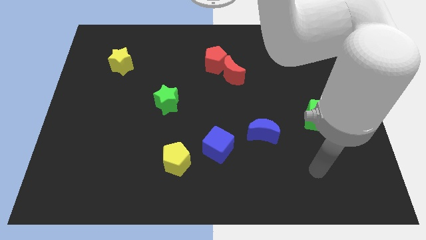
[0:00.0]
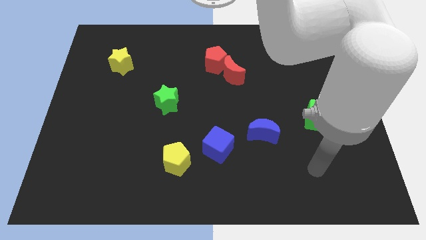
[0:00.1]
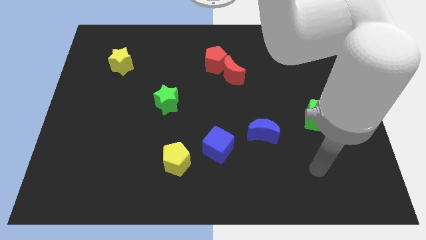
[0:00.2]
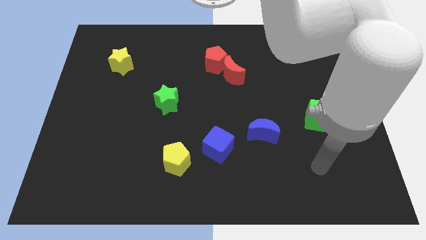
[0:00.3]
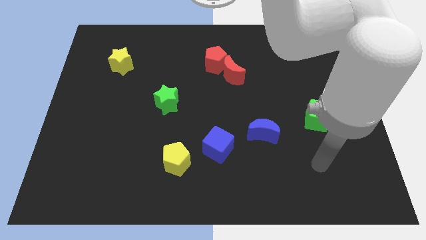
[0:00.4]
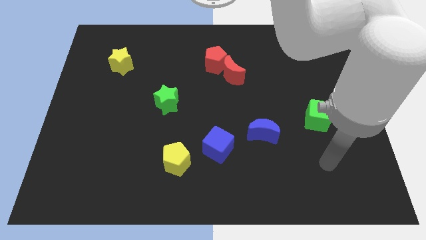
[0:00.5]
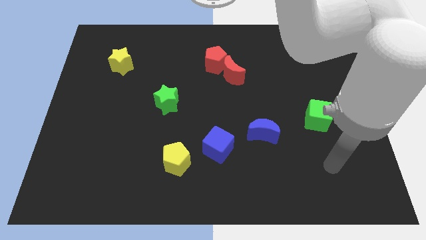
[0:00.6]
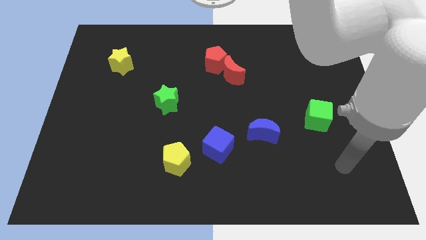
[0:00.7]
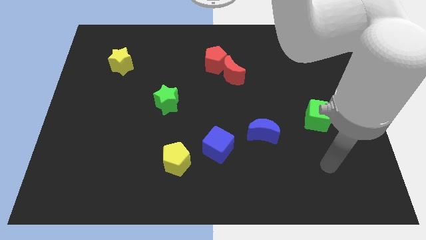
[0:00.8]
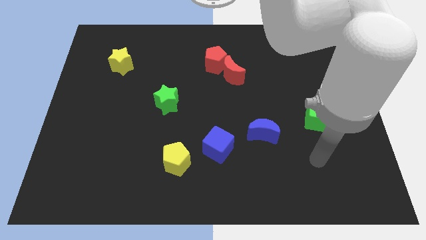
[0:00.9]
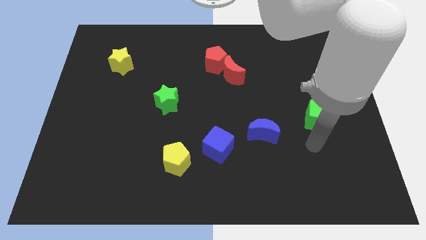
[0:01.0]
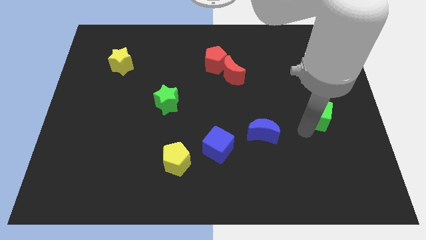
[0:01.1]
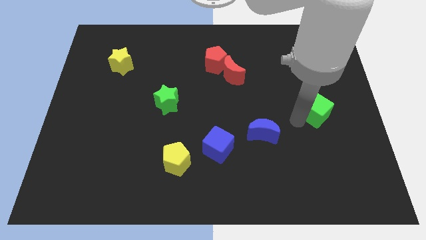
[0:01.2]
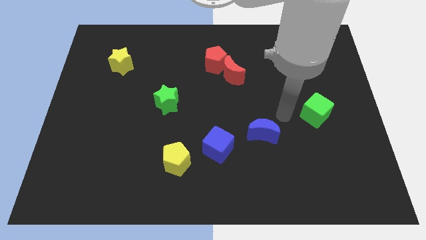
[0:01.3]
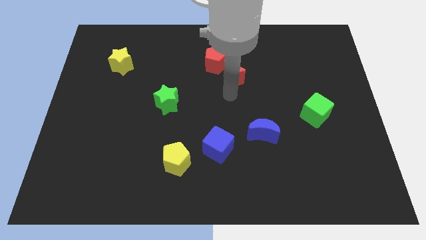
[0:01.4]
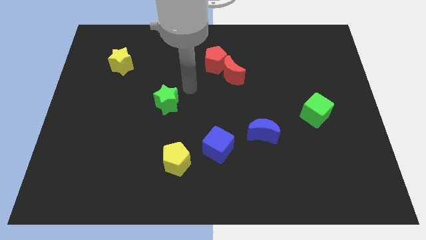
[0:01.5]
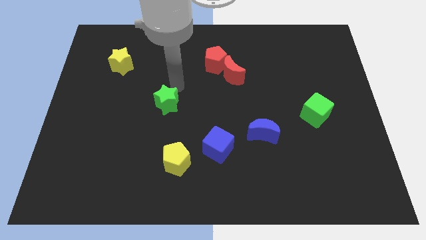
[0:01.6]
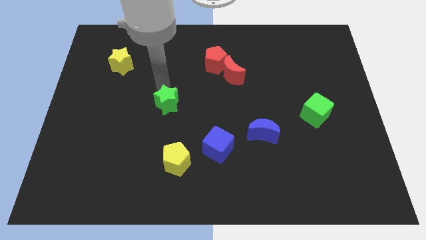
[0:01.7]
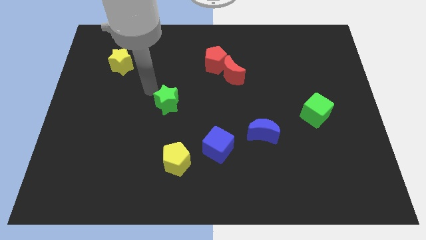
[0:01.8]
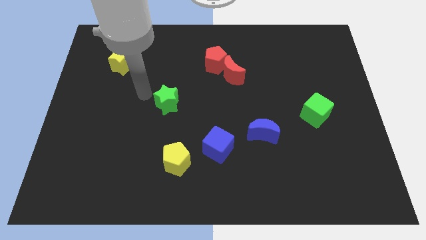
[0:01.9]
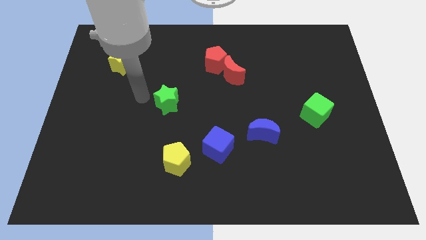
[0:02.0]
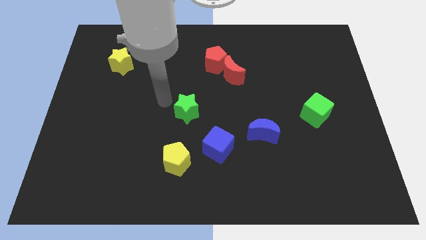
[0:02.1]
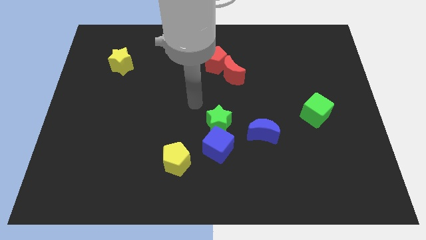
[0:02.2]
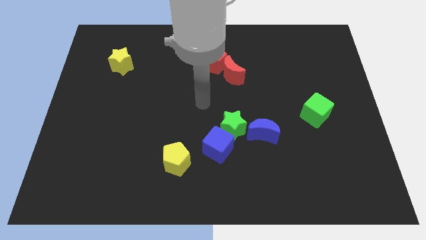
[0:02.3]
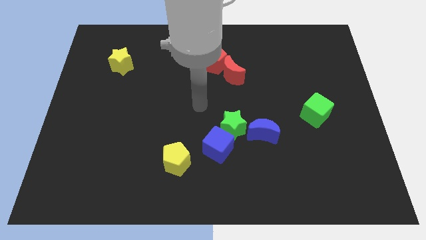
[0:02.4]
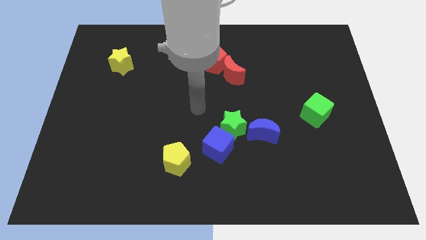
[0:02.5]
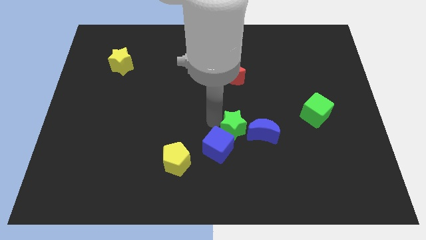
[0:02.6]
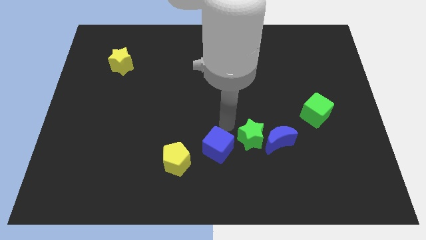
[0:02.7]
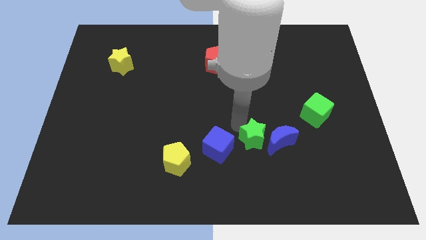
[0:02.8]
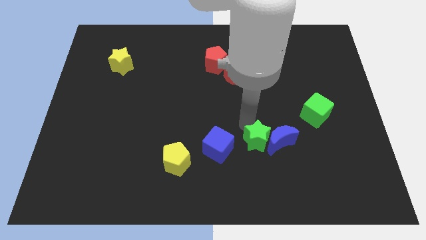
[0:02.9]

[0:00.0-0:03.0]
push the green star close to the blue moon

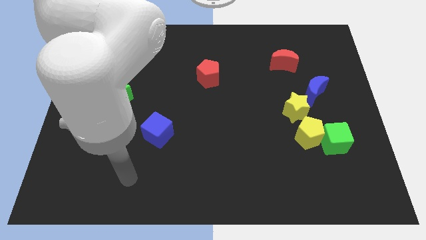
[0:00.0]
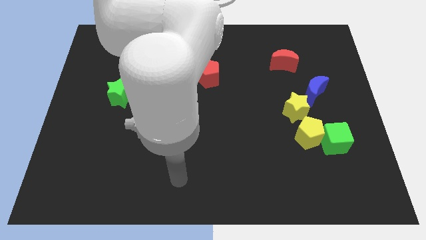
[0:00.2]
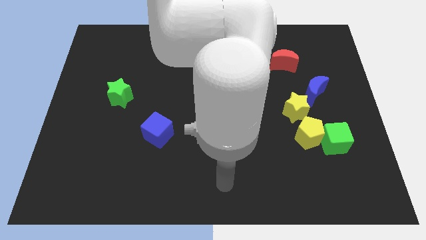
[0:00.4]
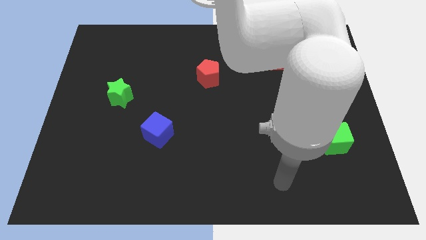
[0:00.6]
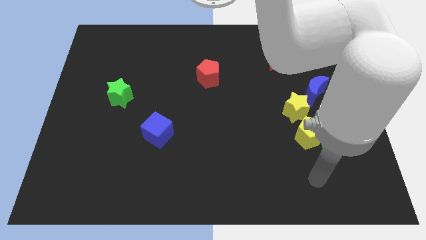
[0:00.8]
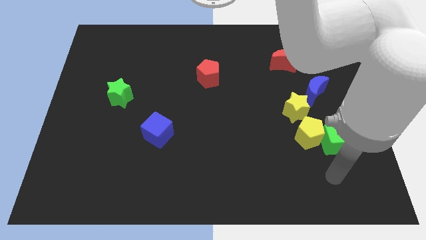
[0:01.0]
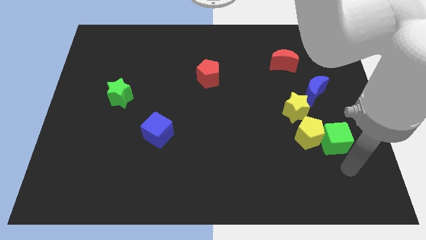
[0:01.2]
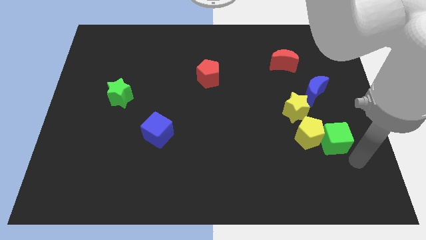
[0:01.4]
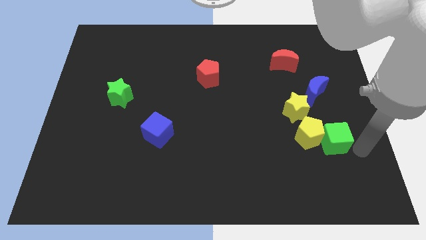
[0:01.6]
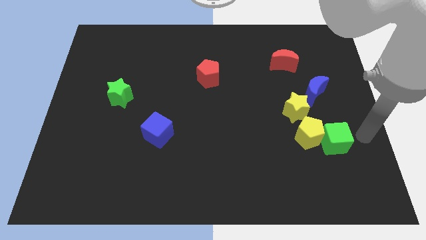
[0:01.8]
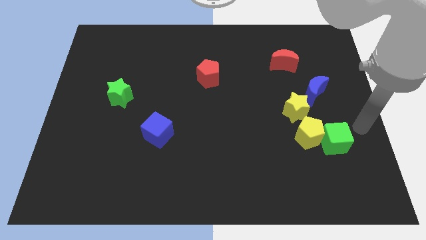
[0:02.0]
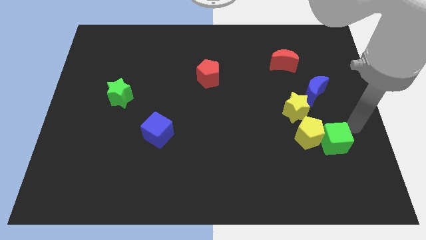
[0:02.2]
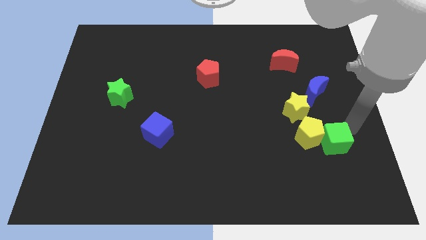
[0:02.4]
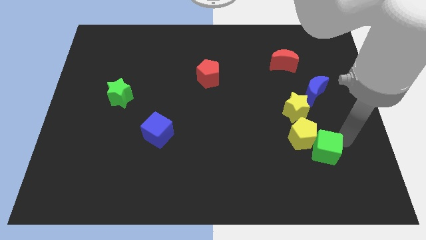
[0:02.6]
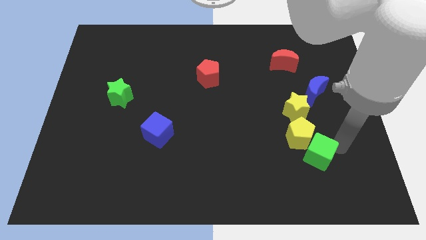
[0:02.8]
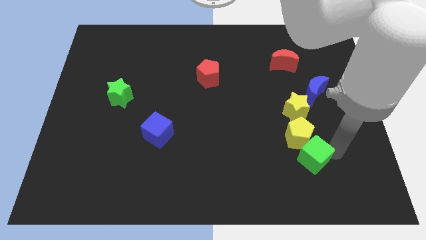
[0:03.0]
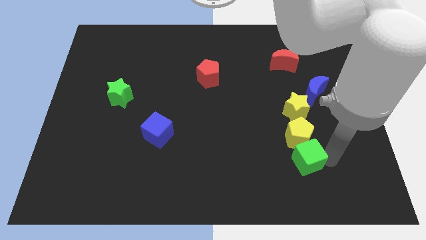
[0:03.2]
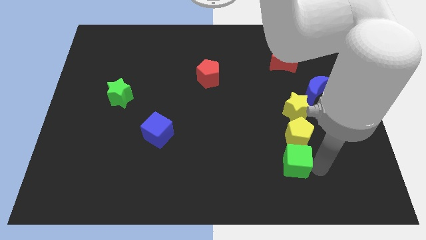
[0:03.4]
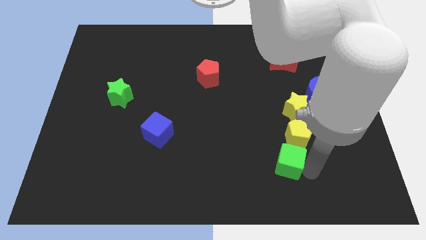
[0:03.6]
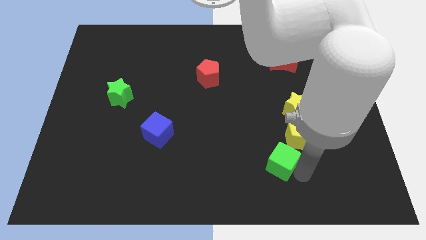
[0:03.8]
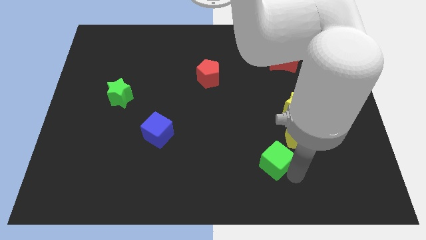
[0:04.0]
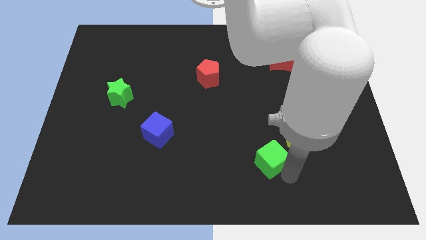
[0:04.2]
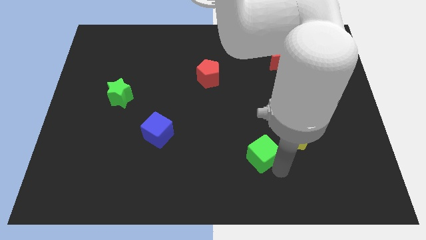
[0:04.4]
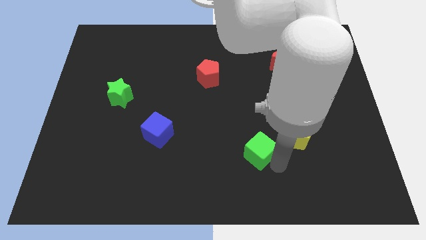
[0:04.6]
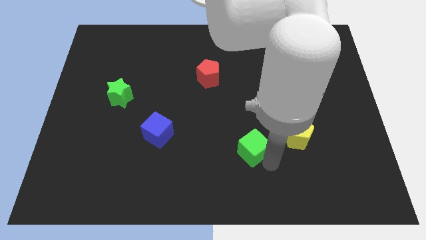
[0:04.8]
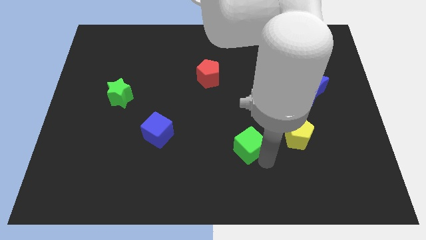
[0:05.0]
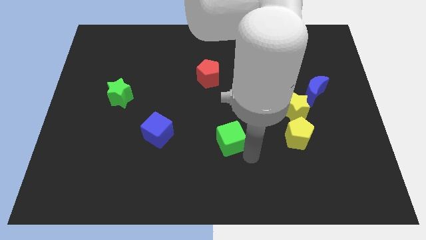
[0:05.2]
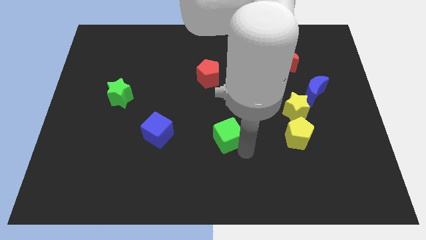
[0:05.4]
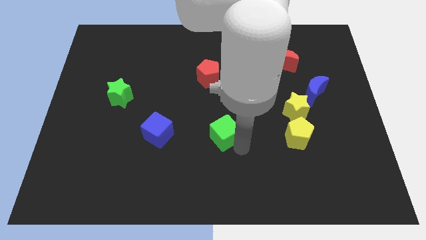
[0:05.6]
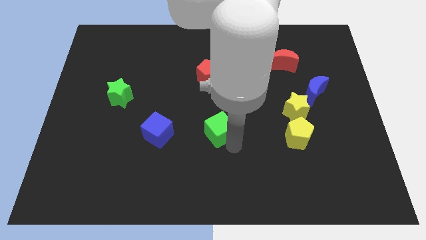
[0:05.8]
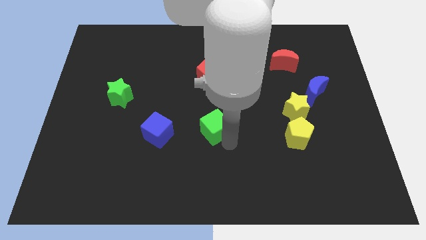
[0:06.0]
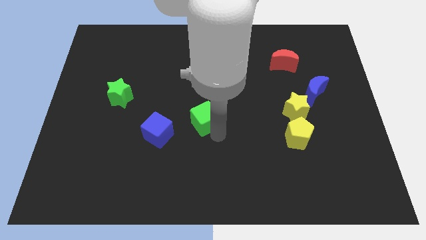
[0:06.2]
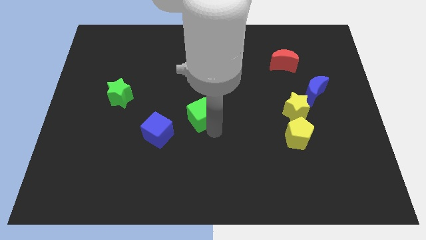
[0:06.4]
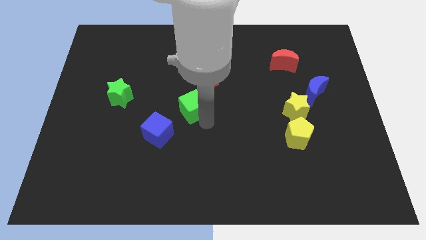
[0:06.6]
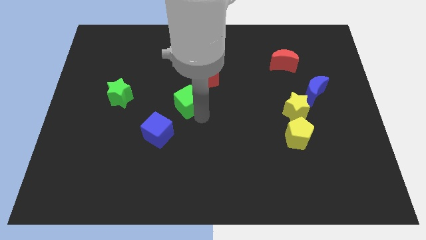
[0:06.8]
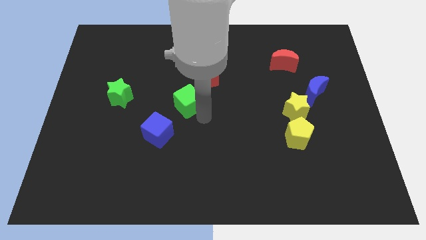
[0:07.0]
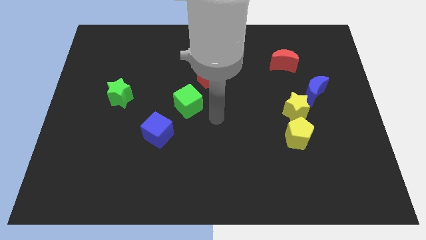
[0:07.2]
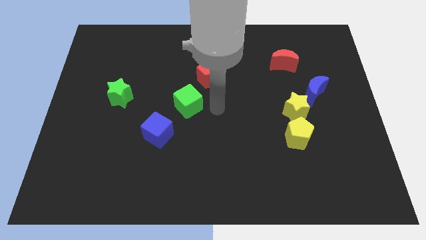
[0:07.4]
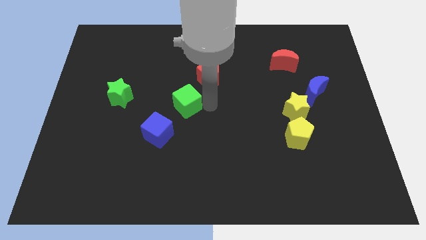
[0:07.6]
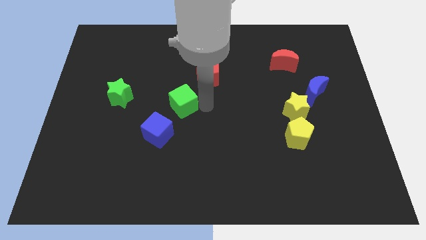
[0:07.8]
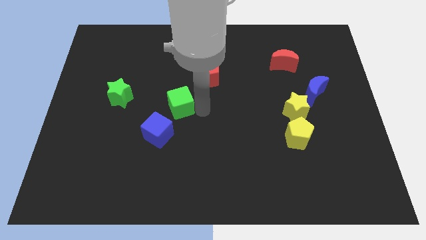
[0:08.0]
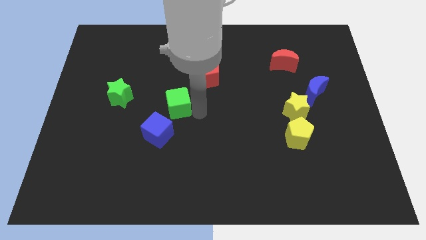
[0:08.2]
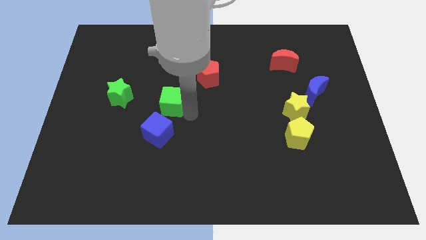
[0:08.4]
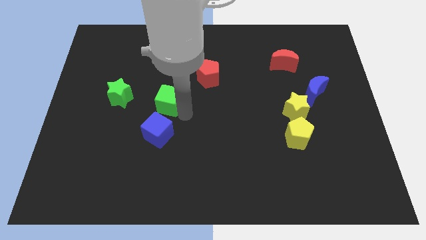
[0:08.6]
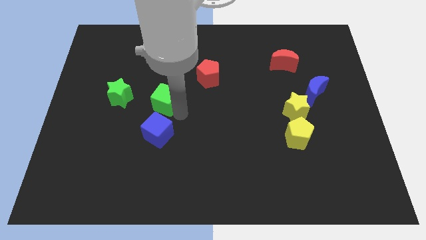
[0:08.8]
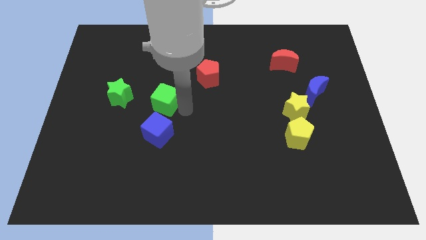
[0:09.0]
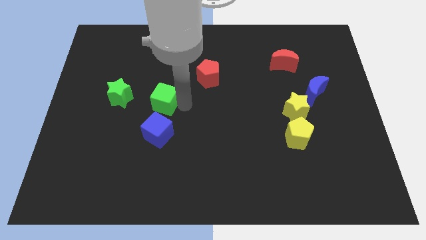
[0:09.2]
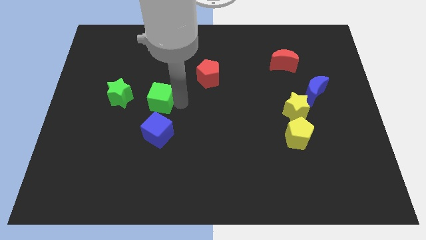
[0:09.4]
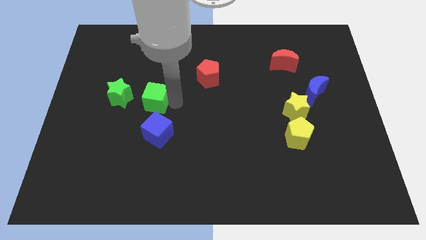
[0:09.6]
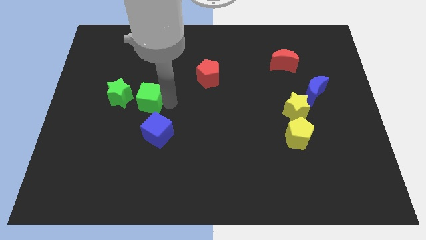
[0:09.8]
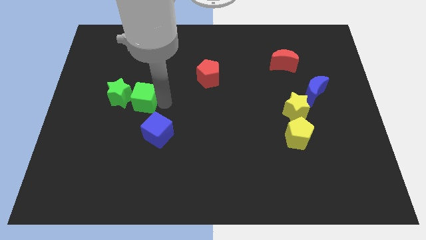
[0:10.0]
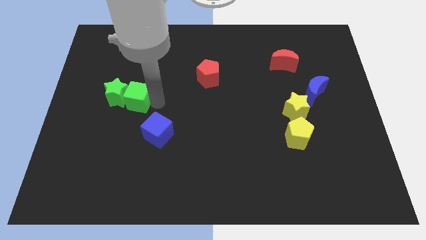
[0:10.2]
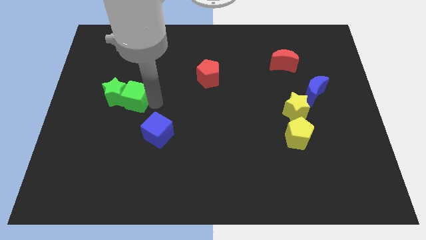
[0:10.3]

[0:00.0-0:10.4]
slide the green cube next to the green star
